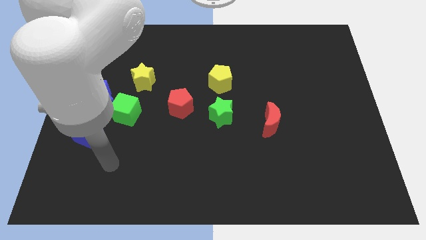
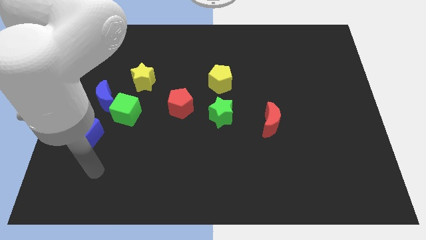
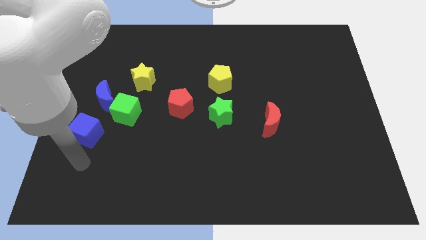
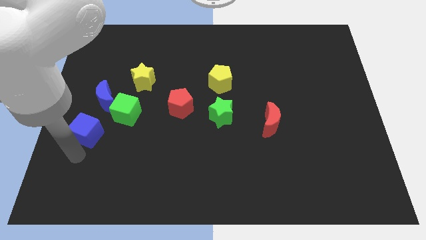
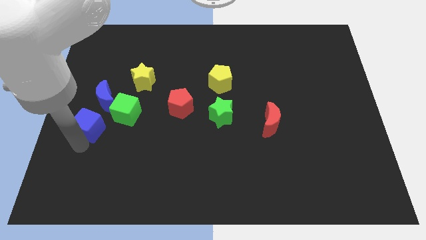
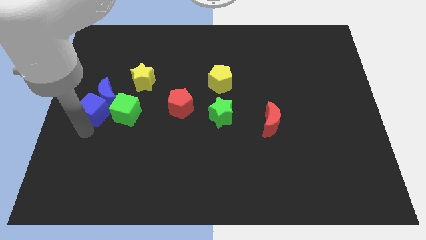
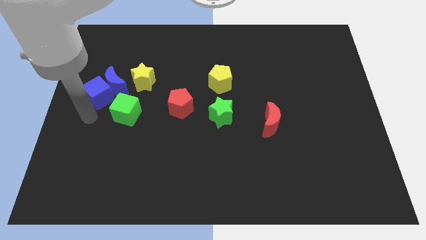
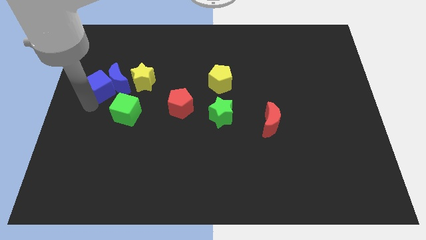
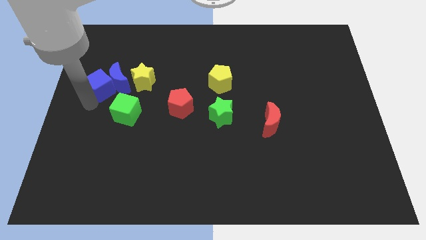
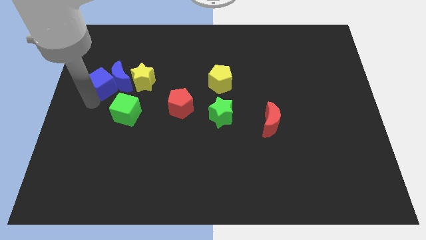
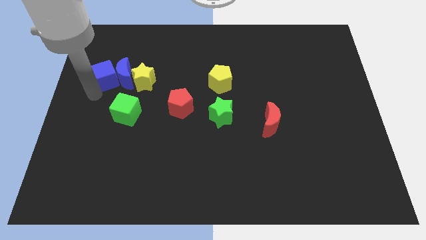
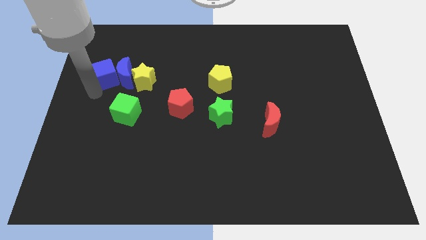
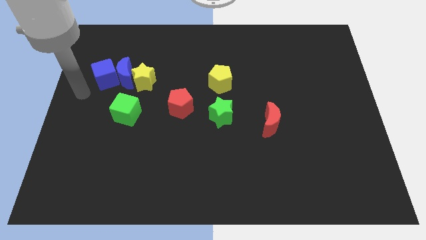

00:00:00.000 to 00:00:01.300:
place blue cube to the left of blue moon

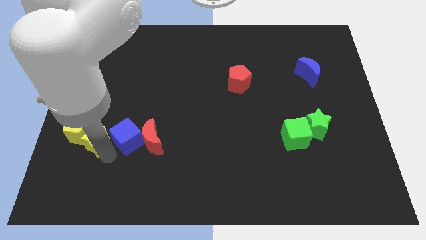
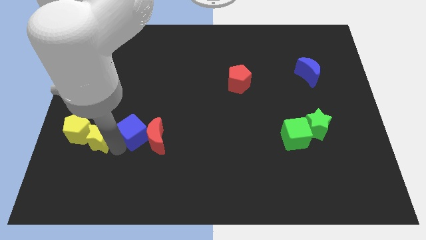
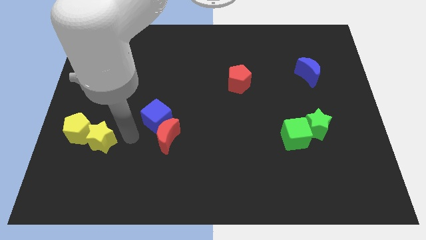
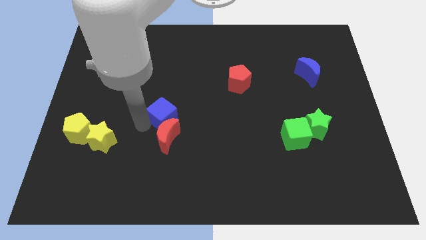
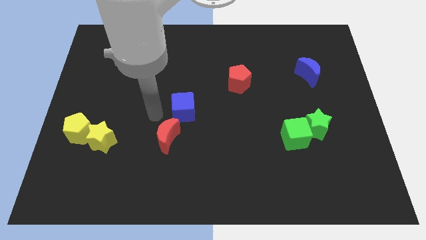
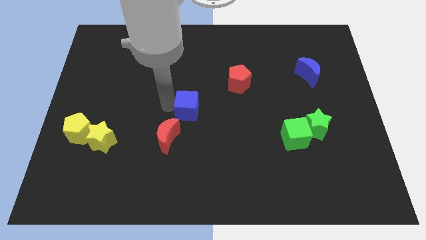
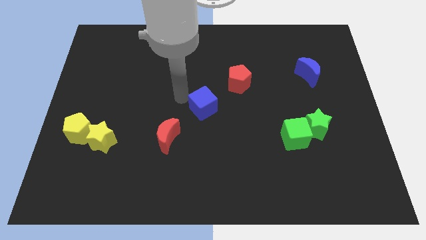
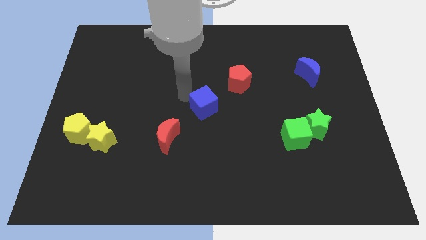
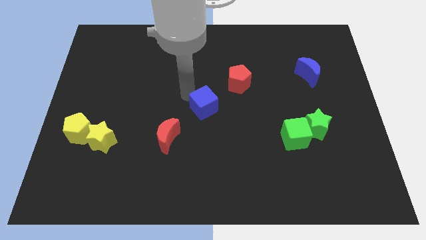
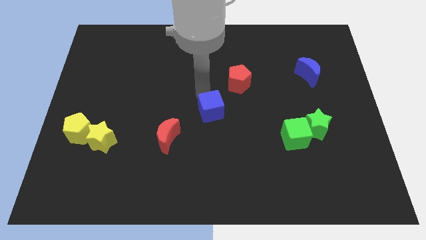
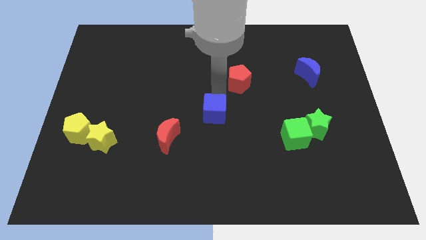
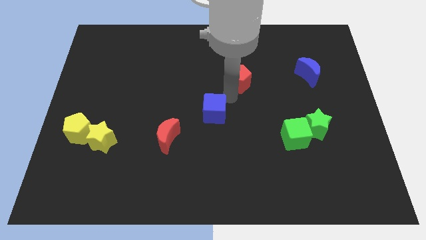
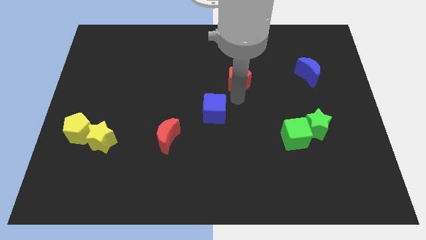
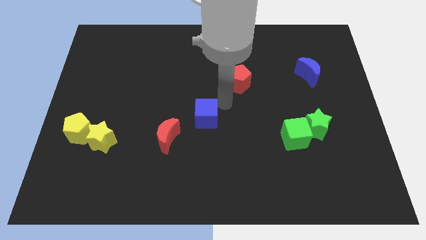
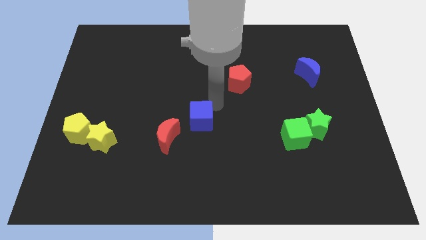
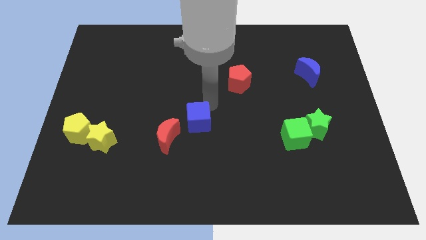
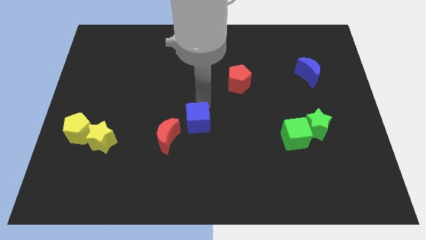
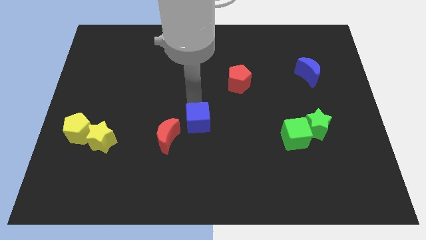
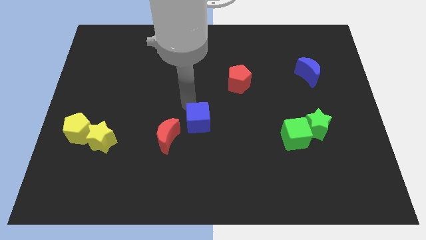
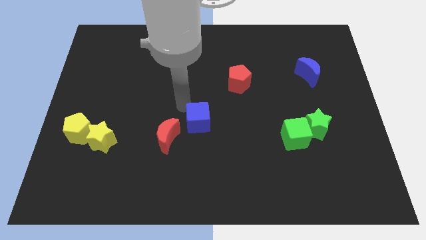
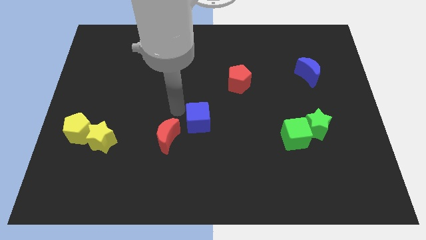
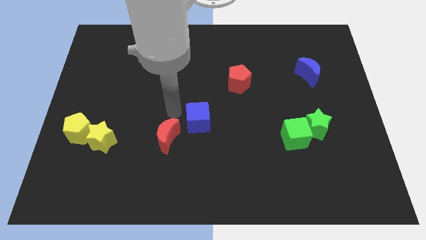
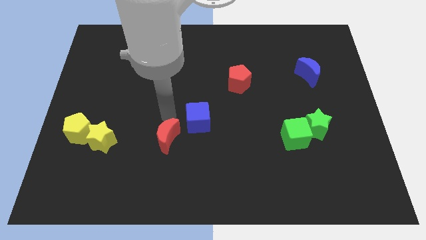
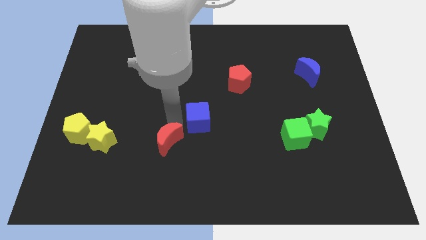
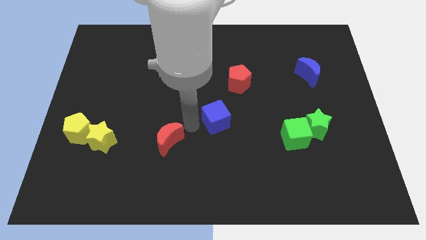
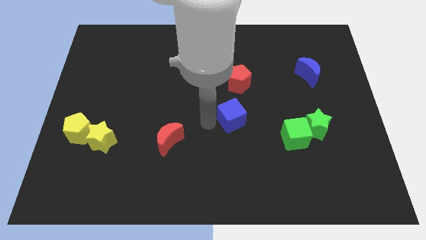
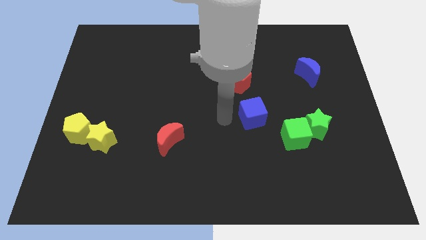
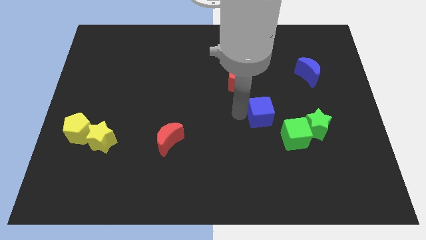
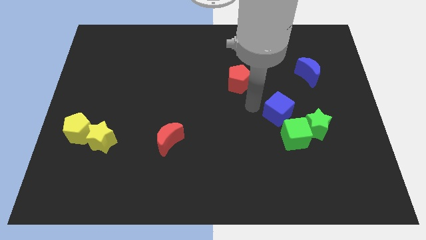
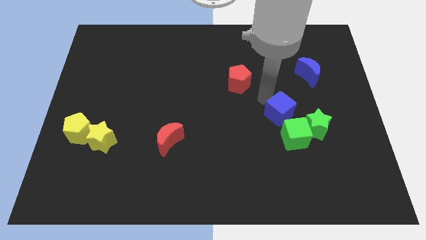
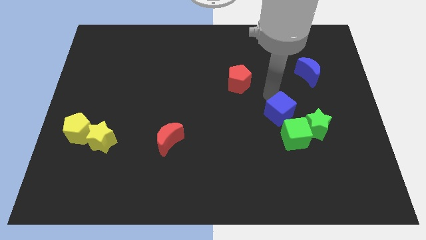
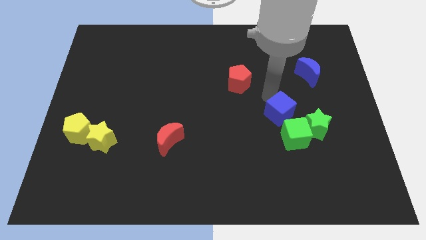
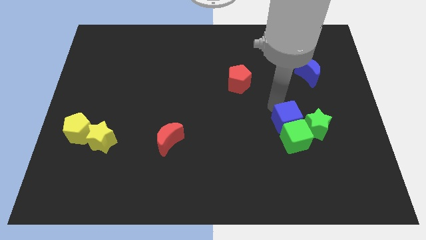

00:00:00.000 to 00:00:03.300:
move the blue cube to the top of the green cube

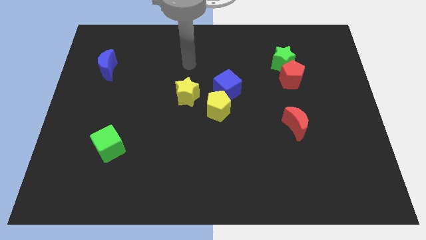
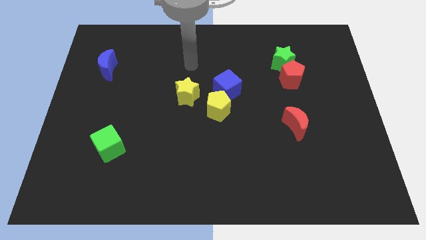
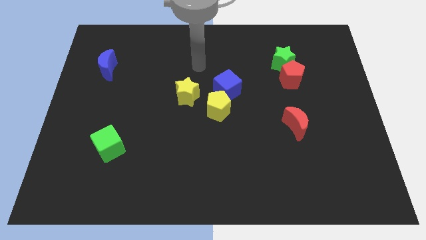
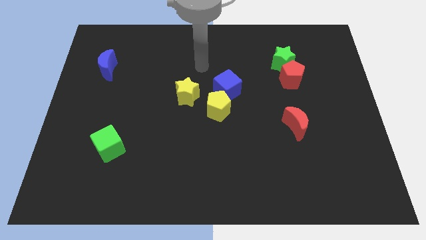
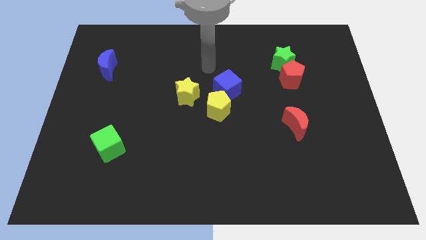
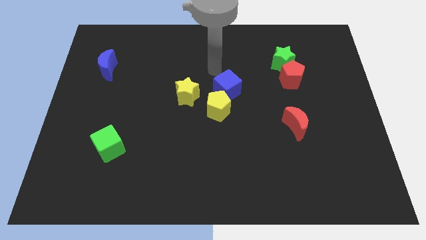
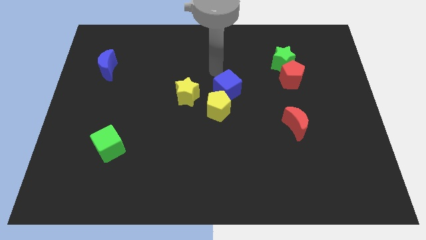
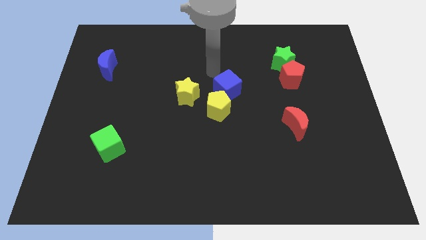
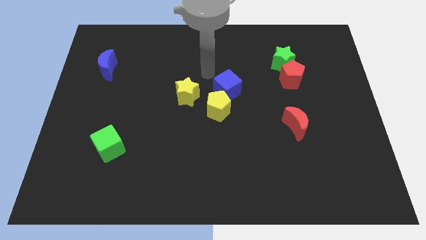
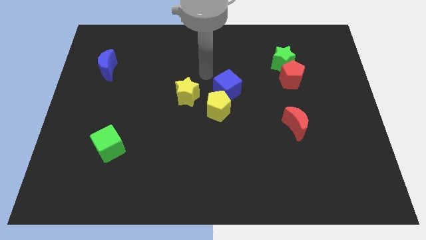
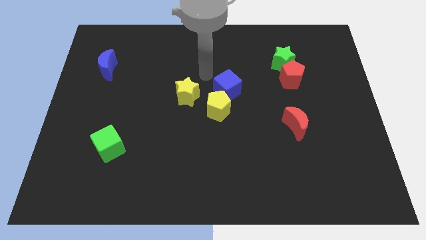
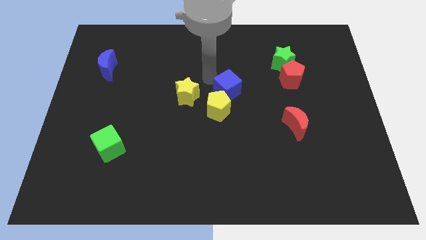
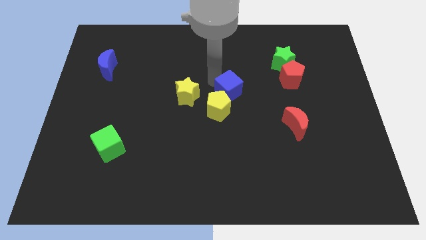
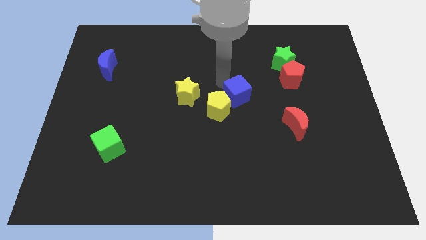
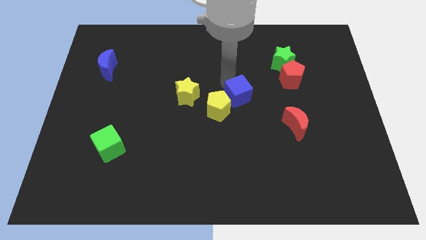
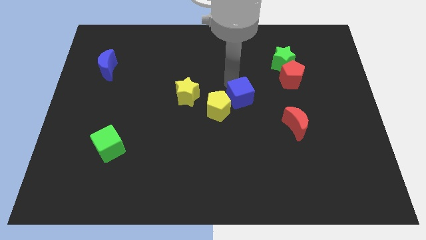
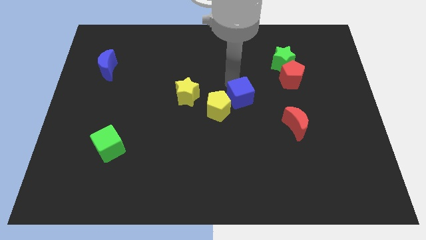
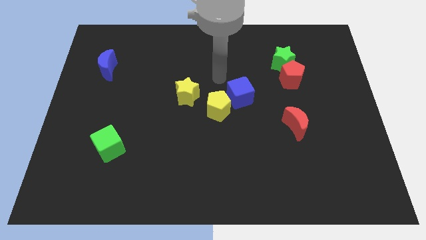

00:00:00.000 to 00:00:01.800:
push the blue cube diagonal to the yellow pentagon

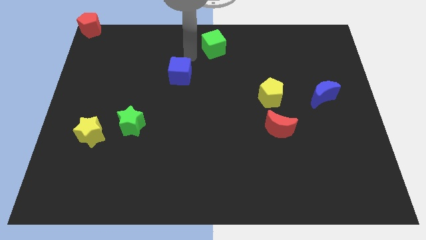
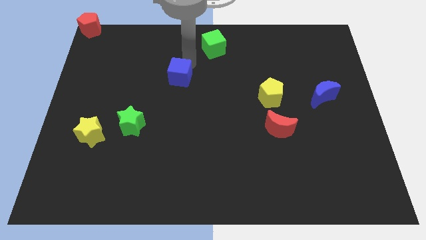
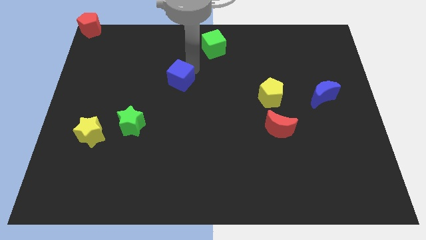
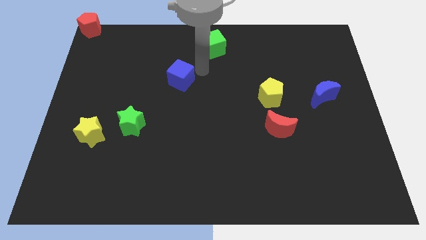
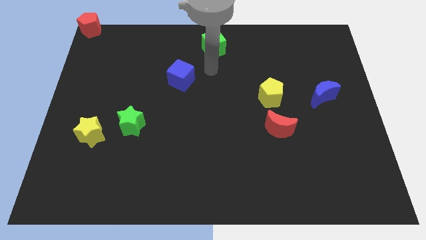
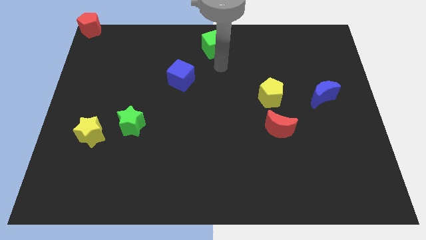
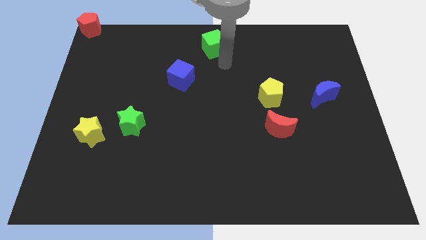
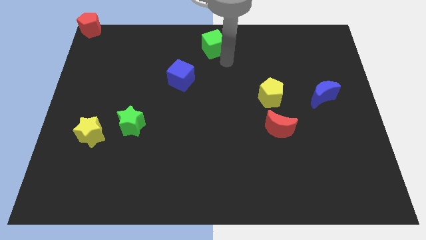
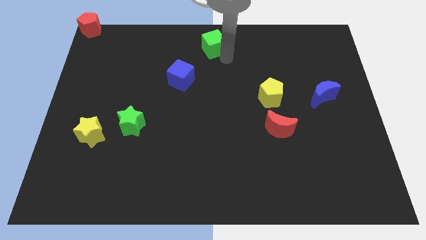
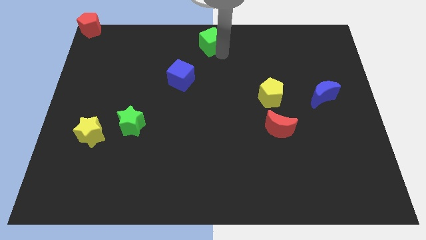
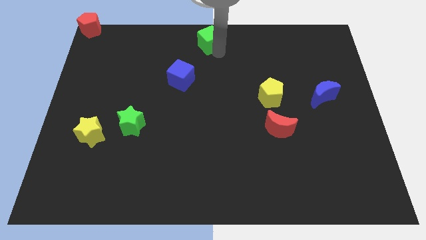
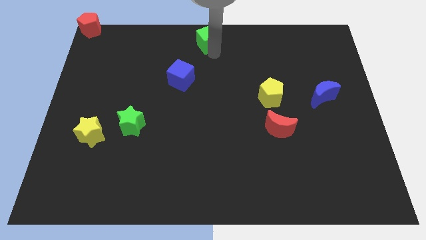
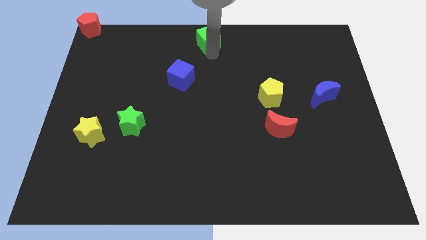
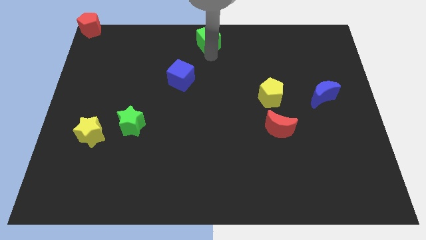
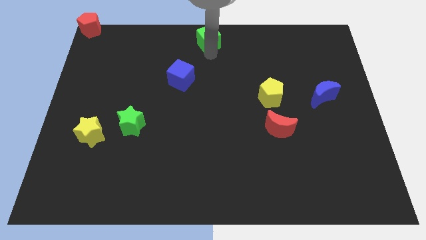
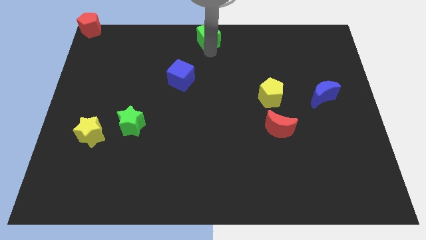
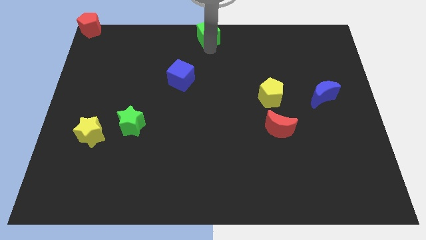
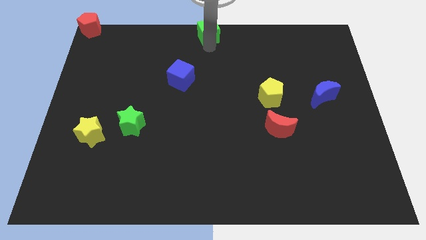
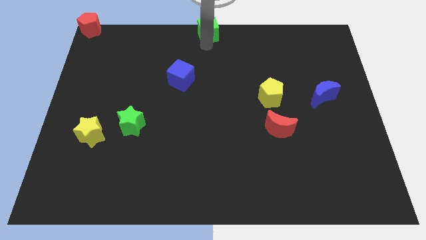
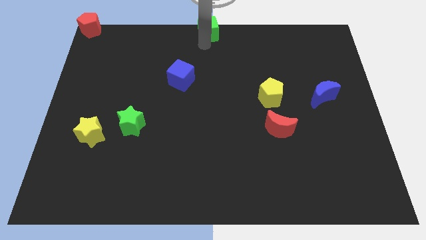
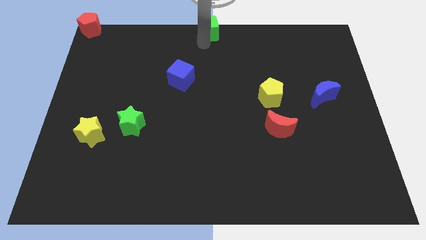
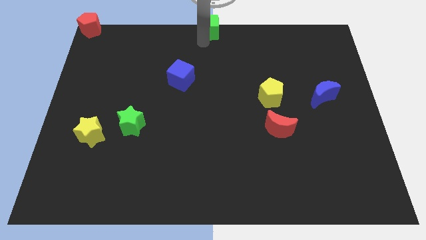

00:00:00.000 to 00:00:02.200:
place green cube at the top center

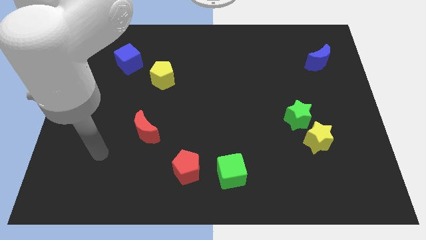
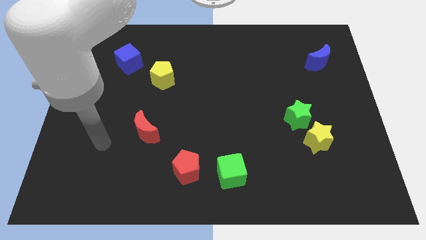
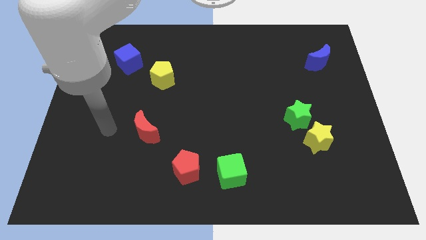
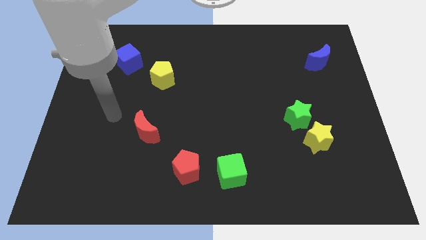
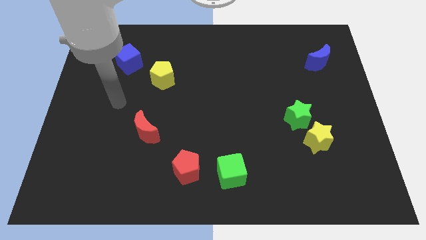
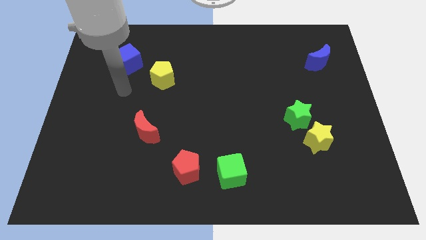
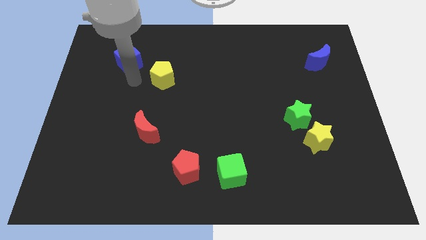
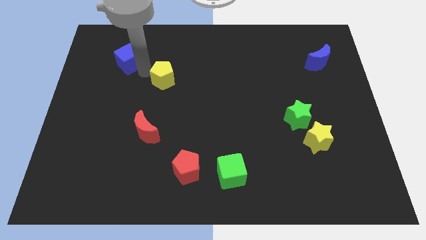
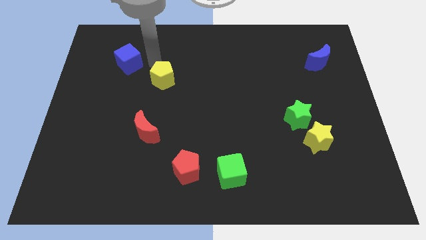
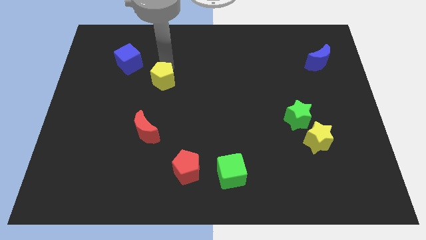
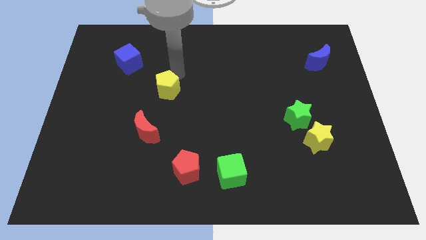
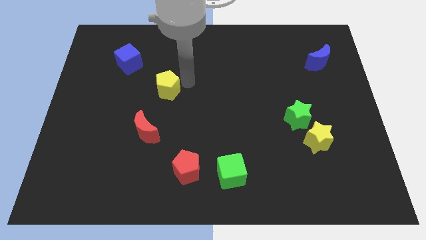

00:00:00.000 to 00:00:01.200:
move arm to the top right of the yellow pentagon
